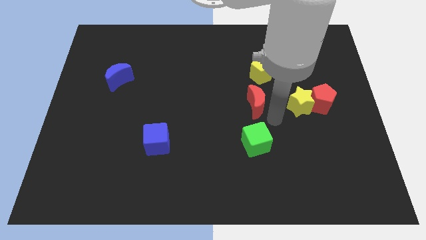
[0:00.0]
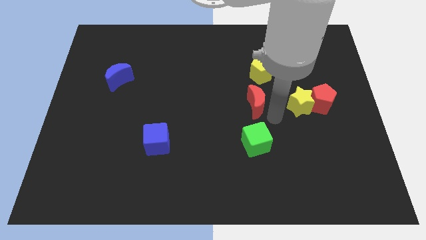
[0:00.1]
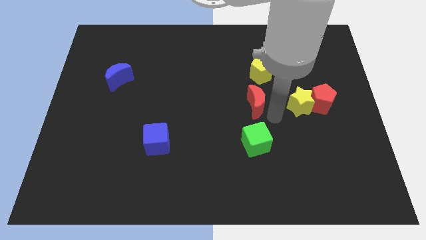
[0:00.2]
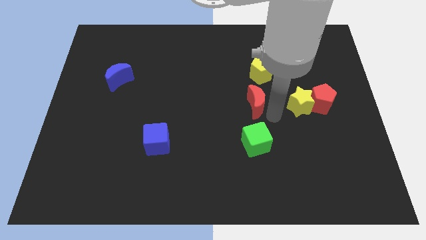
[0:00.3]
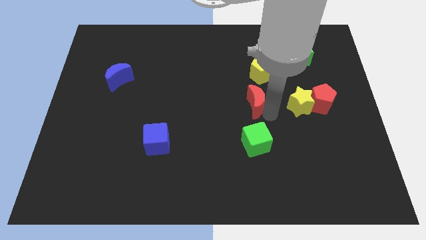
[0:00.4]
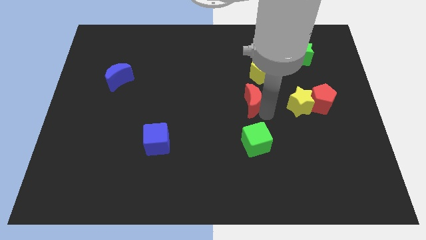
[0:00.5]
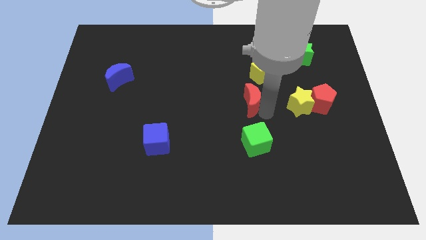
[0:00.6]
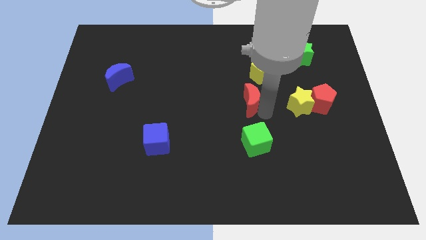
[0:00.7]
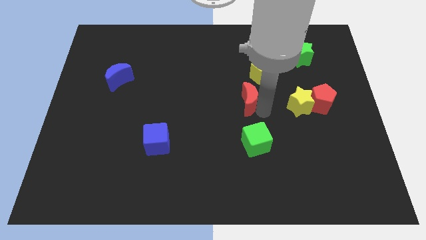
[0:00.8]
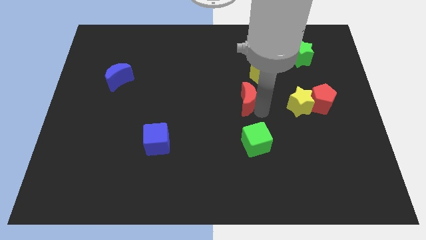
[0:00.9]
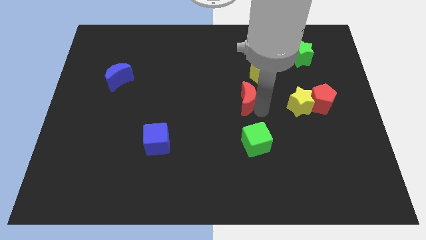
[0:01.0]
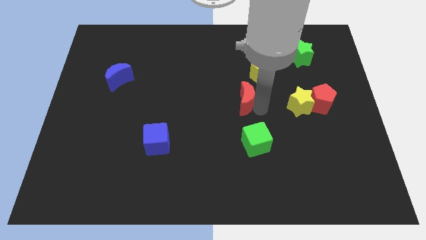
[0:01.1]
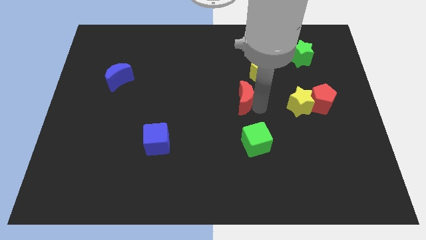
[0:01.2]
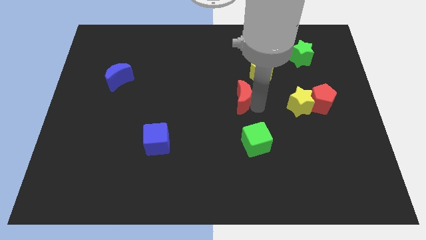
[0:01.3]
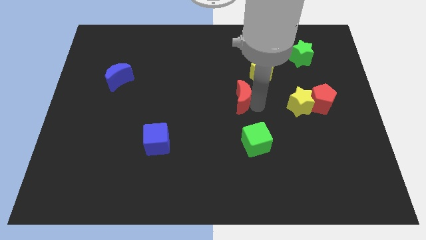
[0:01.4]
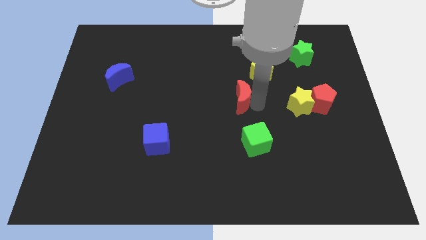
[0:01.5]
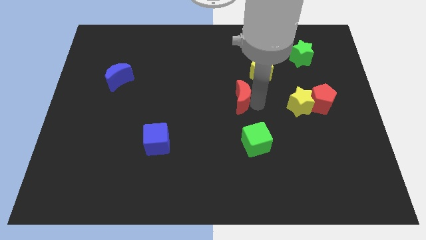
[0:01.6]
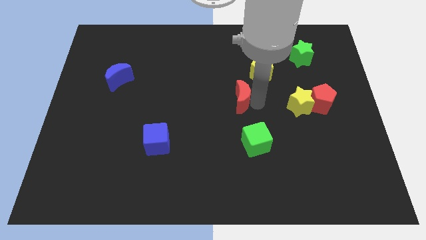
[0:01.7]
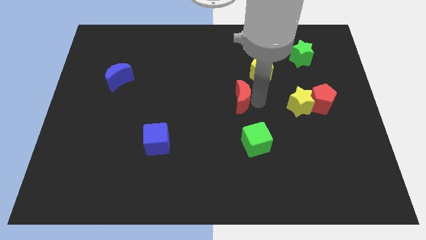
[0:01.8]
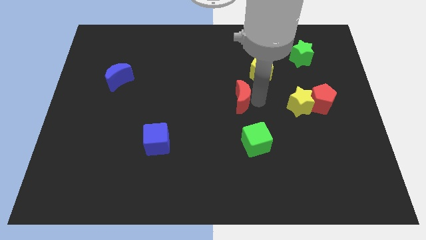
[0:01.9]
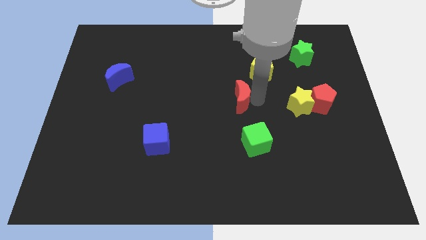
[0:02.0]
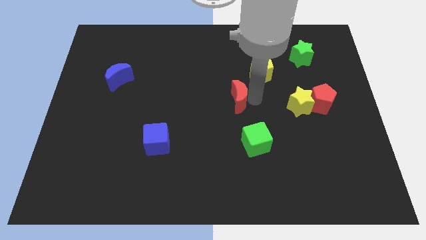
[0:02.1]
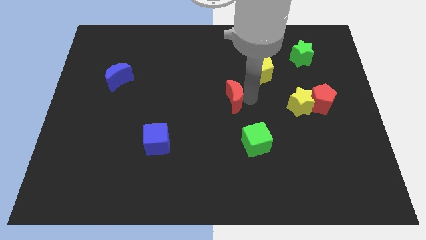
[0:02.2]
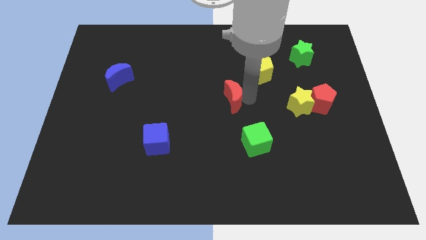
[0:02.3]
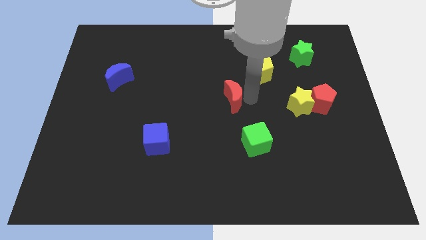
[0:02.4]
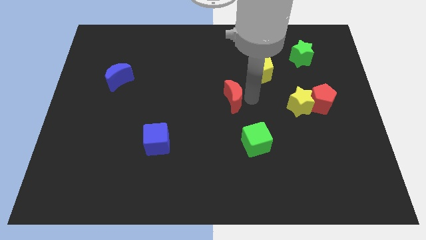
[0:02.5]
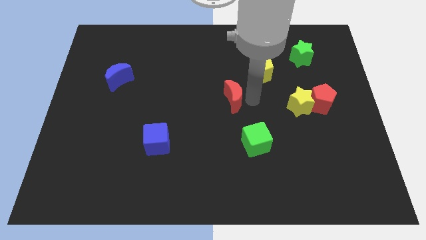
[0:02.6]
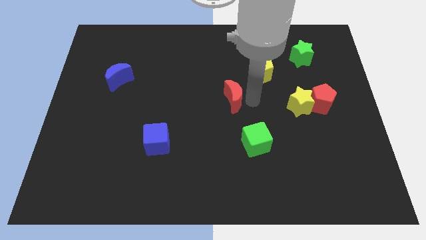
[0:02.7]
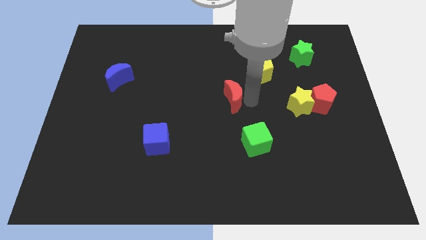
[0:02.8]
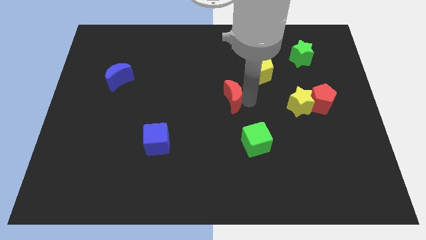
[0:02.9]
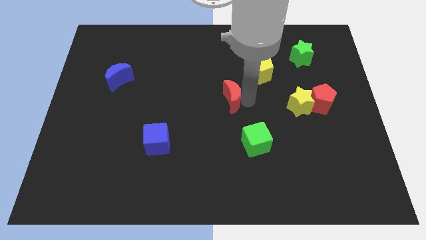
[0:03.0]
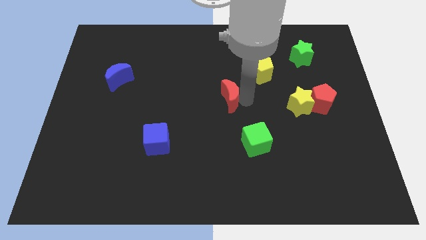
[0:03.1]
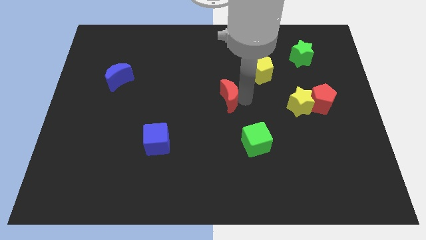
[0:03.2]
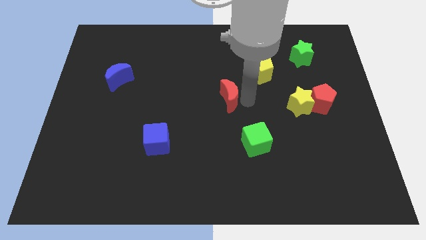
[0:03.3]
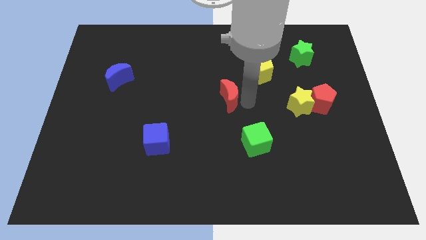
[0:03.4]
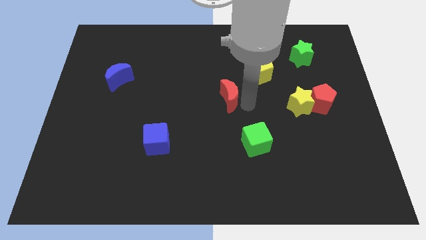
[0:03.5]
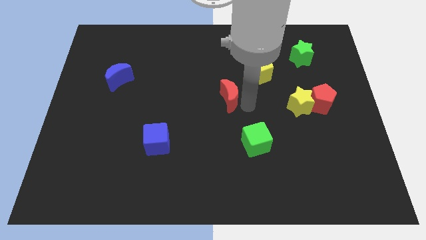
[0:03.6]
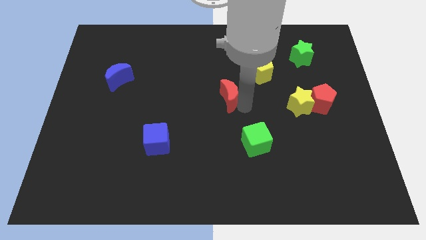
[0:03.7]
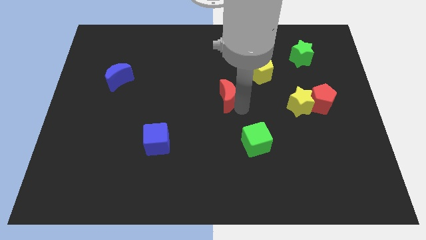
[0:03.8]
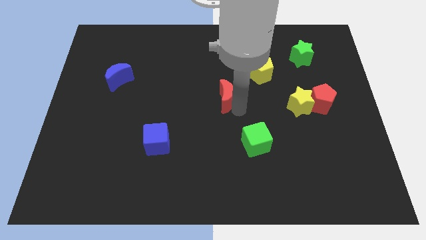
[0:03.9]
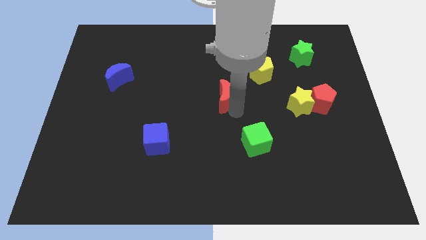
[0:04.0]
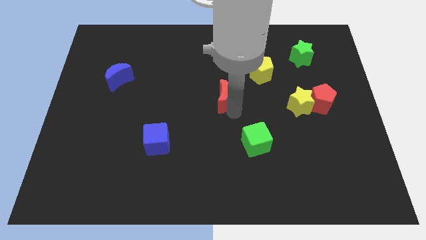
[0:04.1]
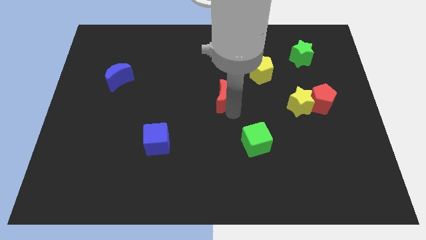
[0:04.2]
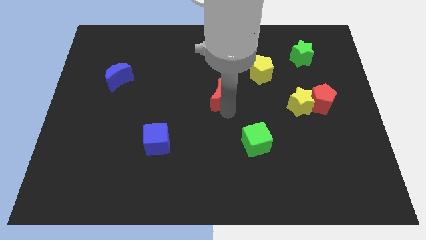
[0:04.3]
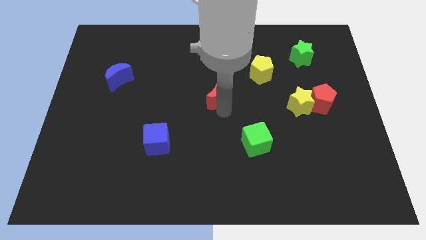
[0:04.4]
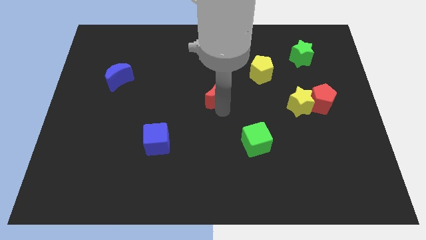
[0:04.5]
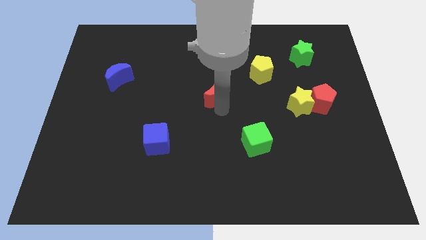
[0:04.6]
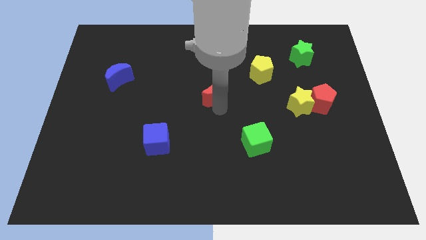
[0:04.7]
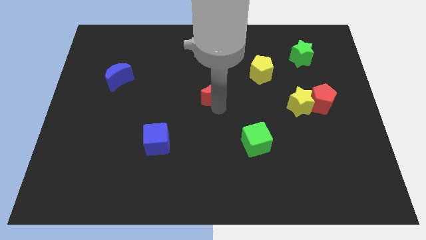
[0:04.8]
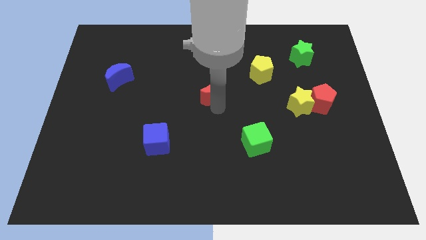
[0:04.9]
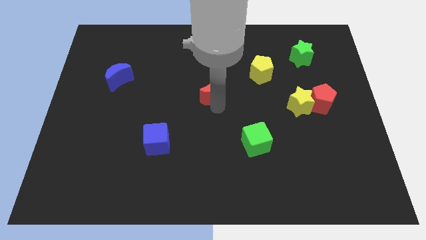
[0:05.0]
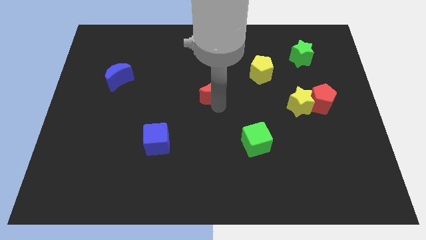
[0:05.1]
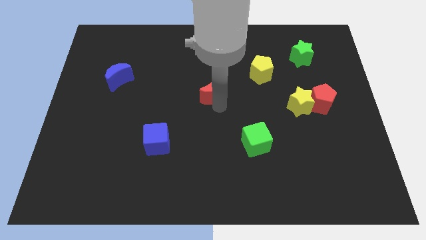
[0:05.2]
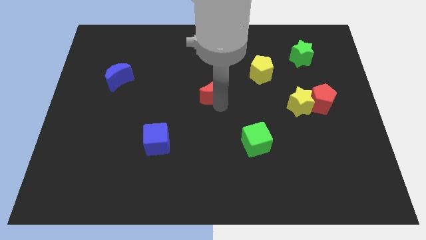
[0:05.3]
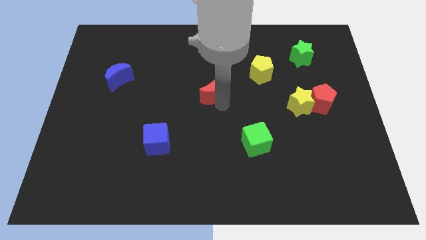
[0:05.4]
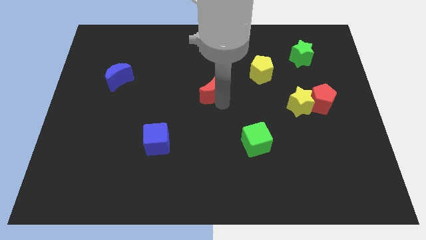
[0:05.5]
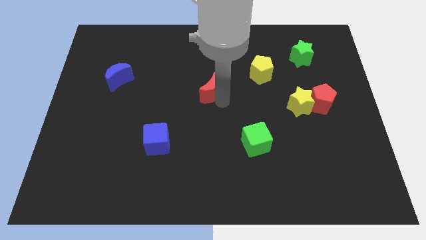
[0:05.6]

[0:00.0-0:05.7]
move the red crescent to the left

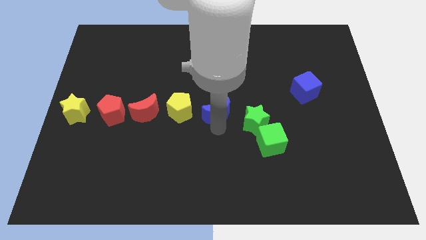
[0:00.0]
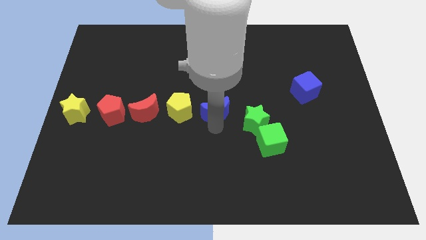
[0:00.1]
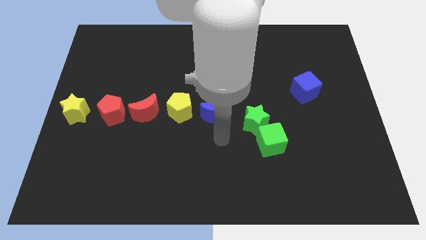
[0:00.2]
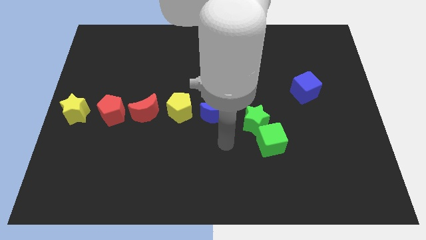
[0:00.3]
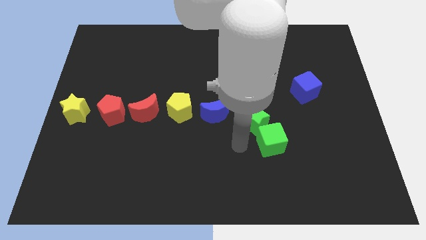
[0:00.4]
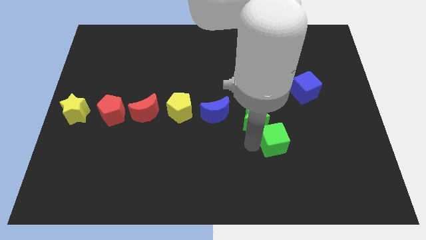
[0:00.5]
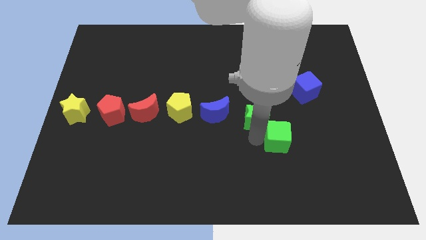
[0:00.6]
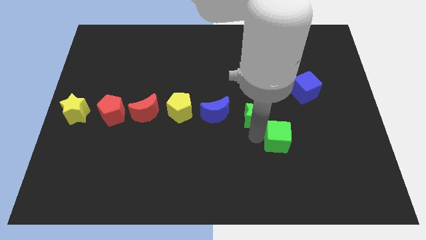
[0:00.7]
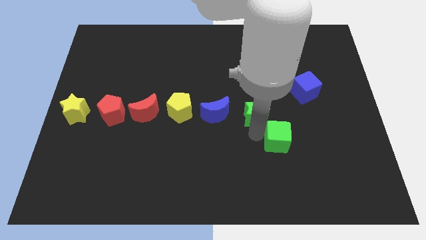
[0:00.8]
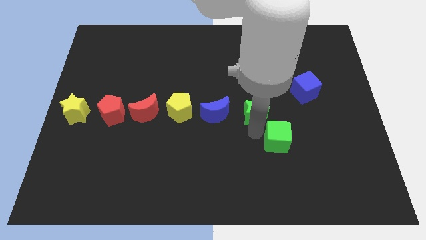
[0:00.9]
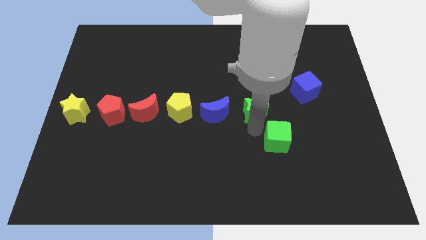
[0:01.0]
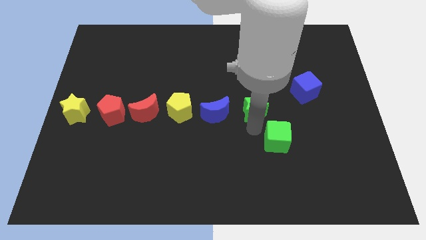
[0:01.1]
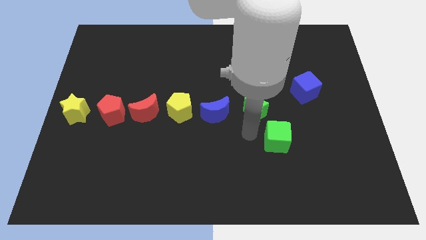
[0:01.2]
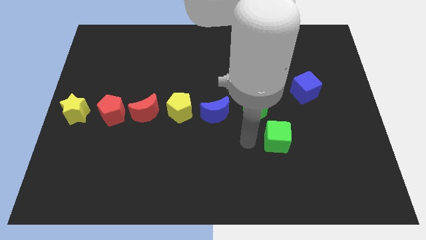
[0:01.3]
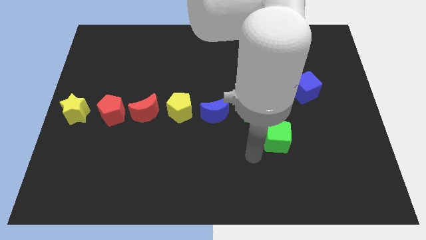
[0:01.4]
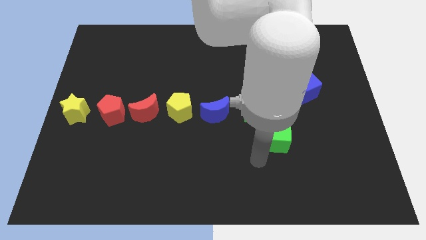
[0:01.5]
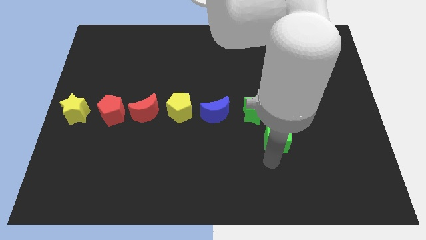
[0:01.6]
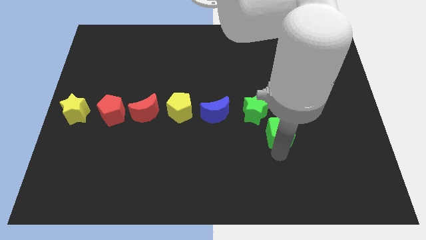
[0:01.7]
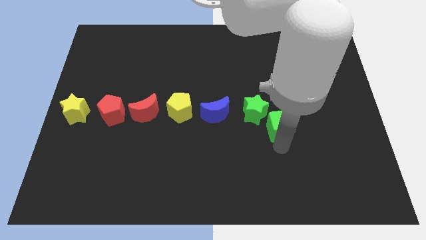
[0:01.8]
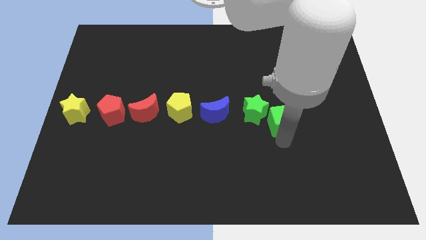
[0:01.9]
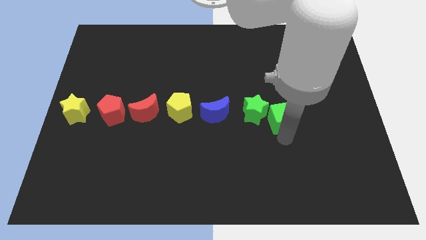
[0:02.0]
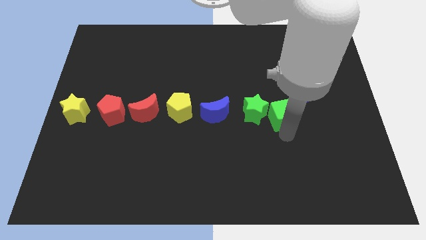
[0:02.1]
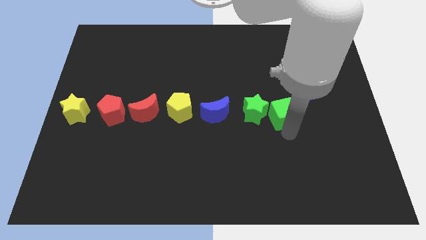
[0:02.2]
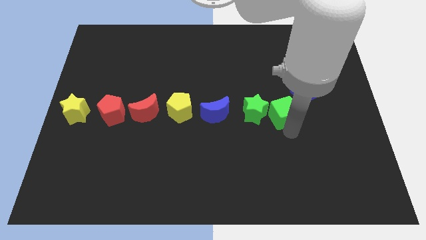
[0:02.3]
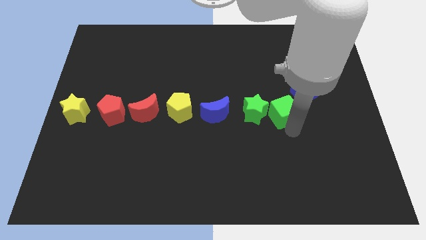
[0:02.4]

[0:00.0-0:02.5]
place green cube beside green star

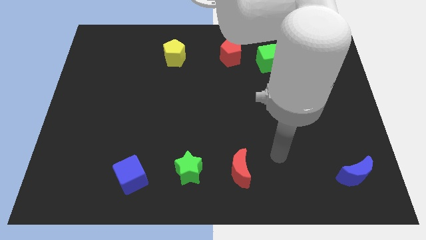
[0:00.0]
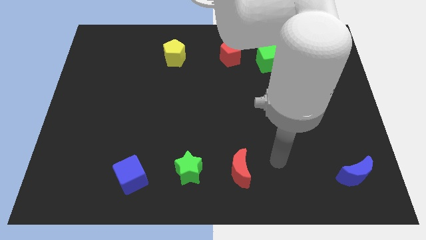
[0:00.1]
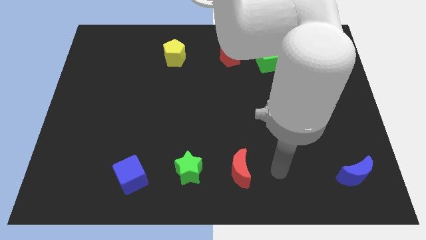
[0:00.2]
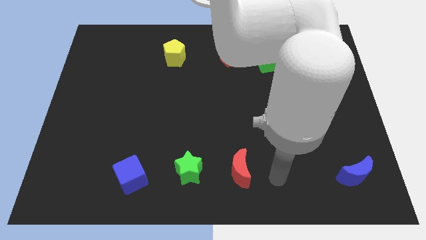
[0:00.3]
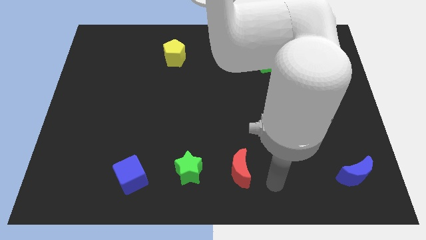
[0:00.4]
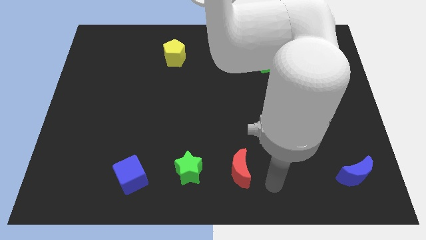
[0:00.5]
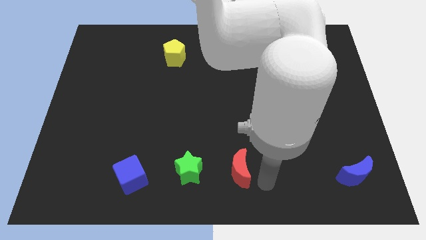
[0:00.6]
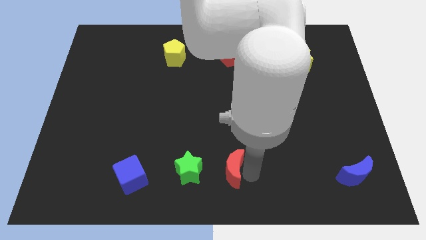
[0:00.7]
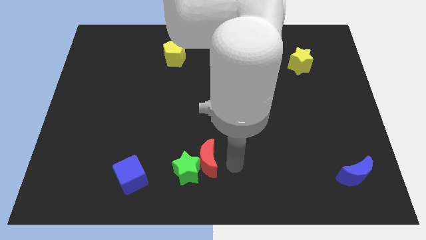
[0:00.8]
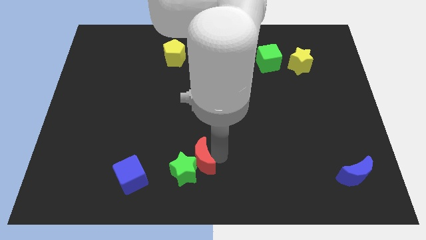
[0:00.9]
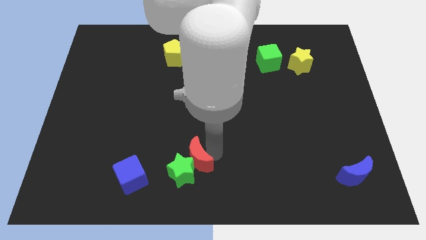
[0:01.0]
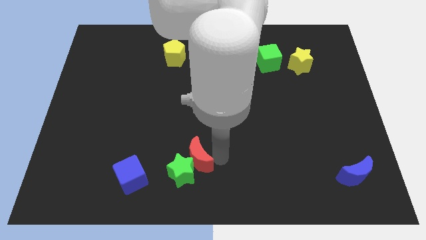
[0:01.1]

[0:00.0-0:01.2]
push the red moon into the green star
